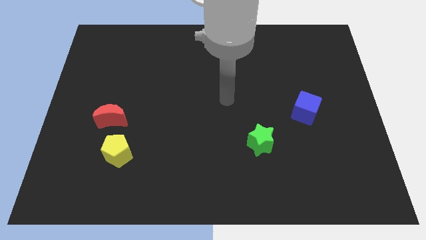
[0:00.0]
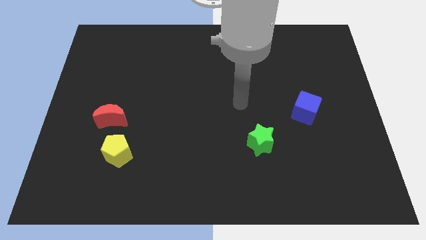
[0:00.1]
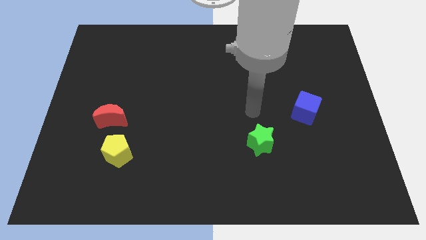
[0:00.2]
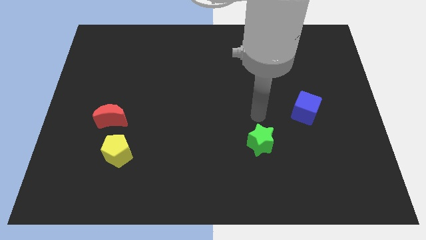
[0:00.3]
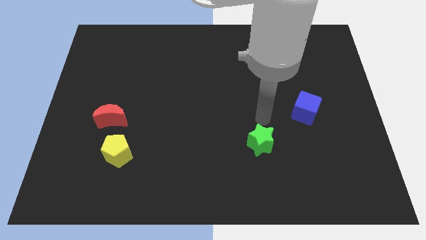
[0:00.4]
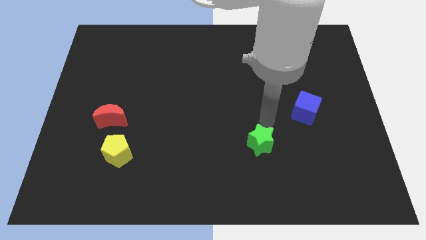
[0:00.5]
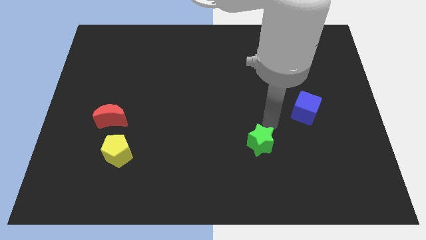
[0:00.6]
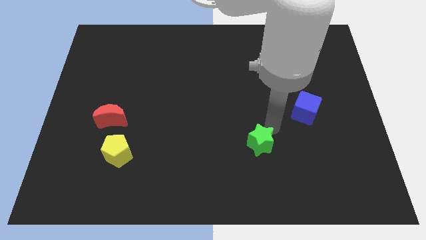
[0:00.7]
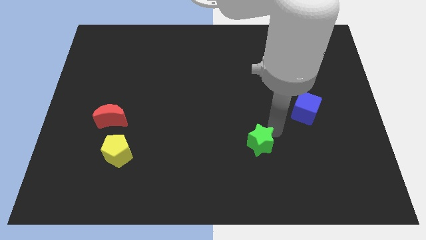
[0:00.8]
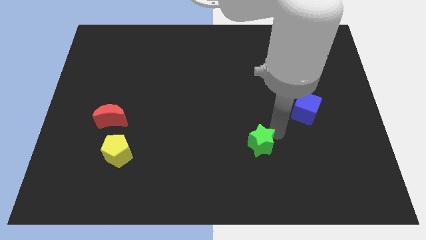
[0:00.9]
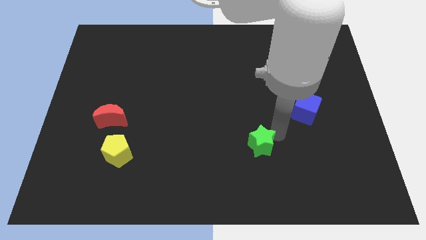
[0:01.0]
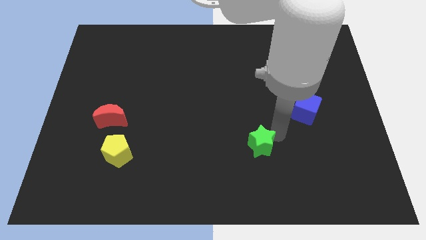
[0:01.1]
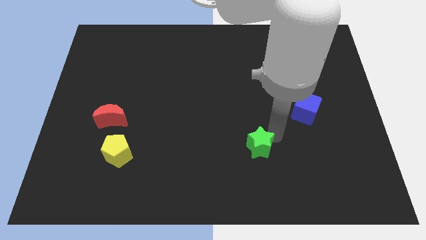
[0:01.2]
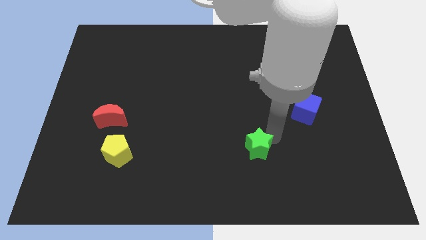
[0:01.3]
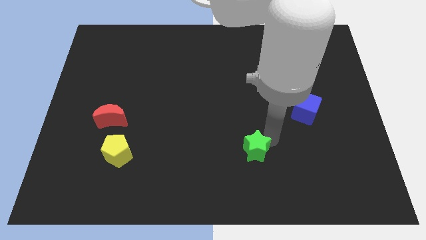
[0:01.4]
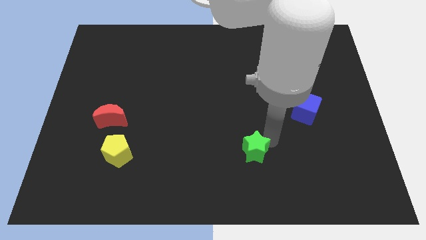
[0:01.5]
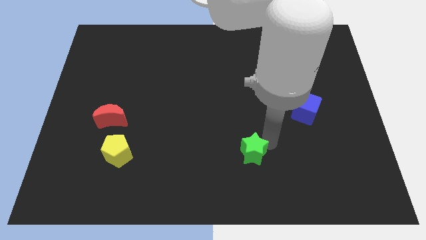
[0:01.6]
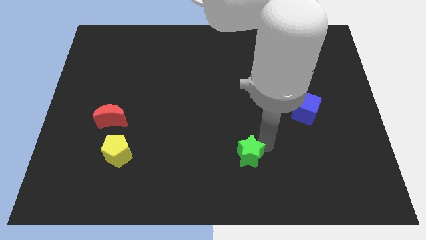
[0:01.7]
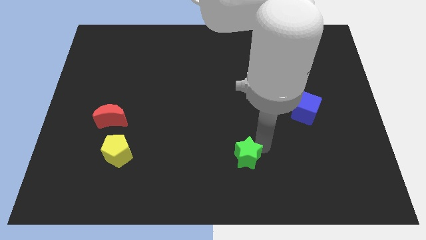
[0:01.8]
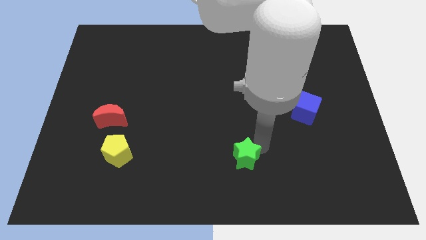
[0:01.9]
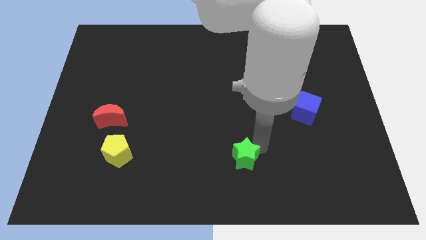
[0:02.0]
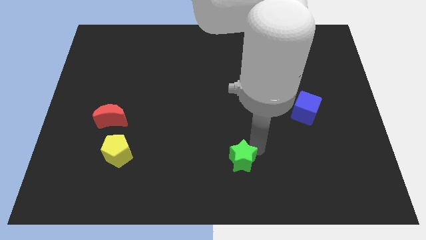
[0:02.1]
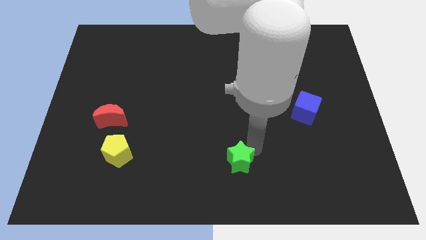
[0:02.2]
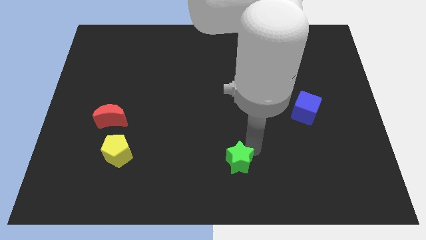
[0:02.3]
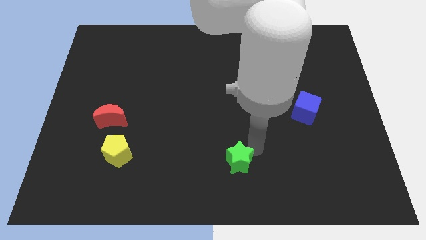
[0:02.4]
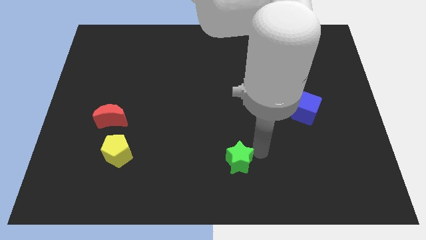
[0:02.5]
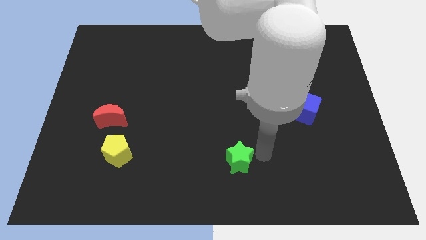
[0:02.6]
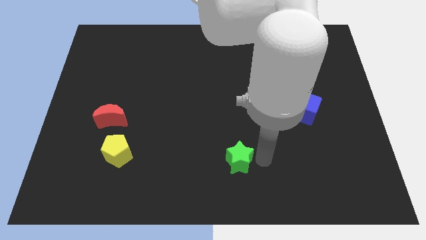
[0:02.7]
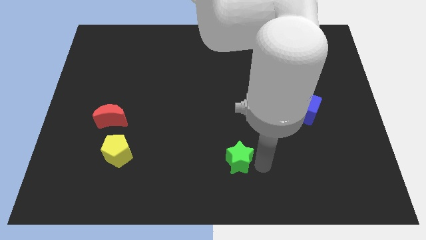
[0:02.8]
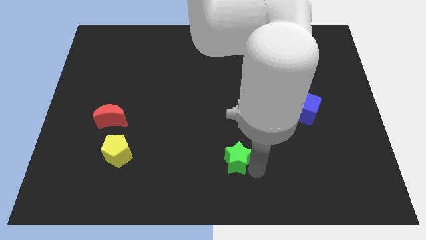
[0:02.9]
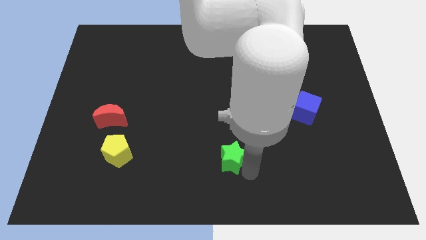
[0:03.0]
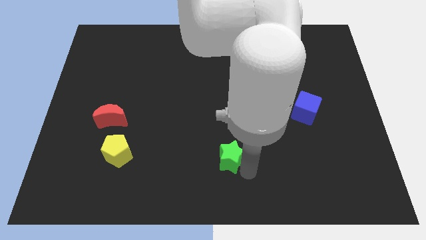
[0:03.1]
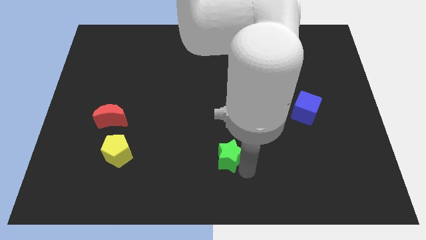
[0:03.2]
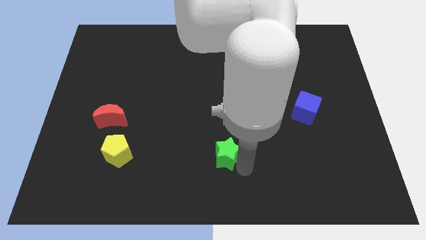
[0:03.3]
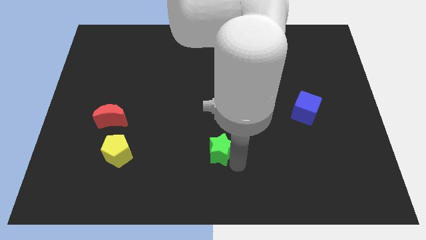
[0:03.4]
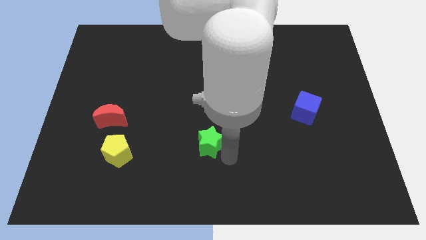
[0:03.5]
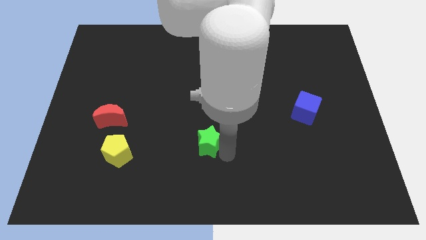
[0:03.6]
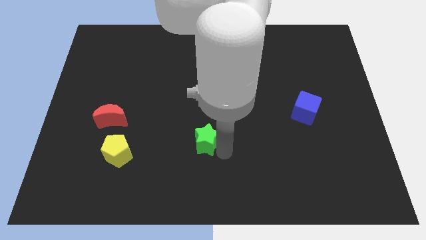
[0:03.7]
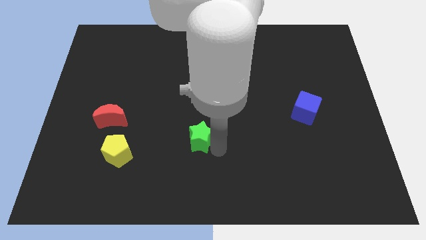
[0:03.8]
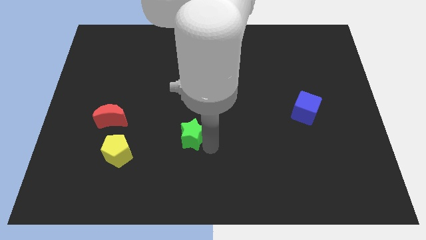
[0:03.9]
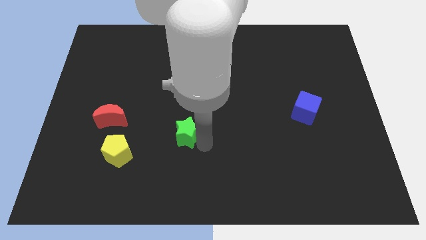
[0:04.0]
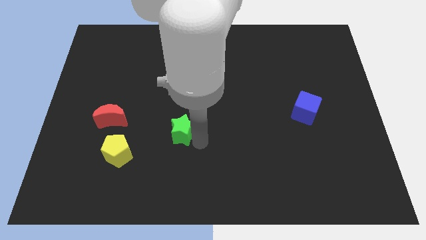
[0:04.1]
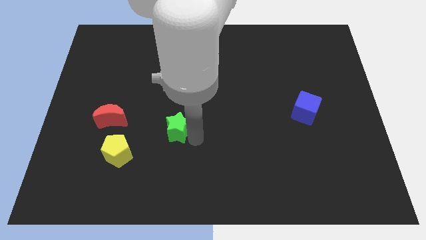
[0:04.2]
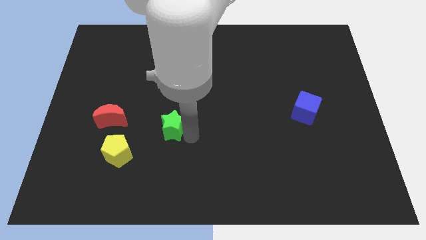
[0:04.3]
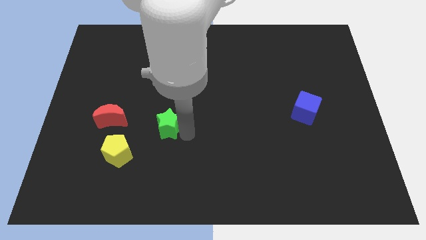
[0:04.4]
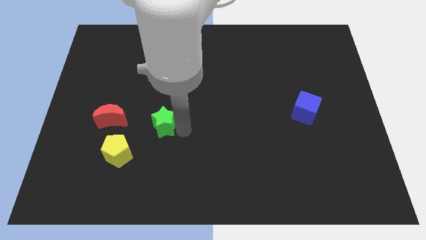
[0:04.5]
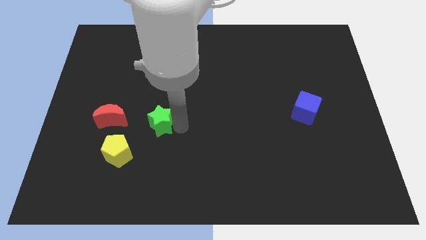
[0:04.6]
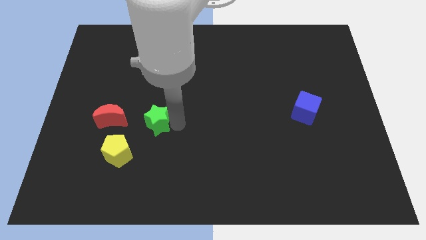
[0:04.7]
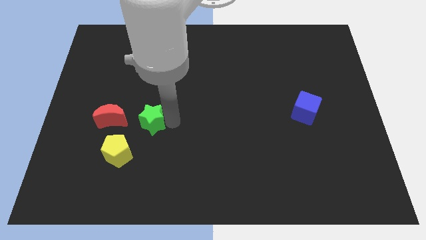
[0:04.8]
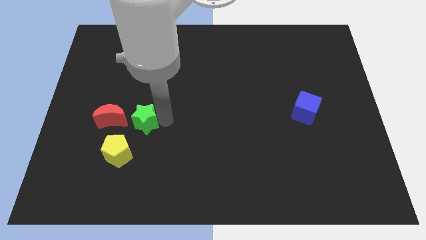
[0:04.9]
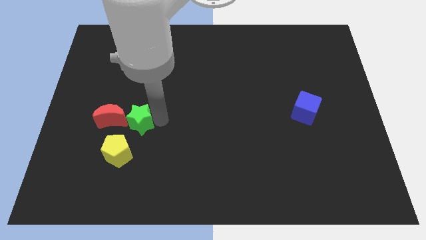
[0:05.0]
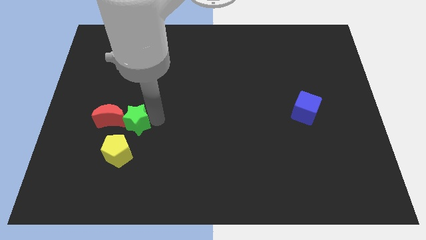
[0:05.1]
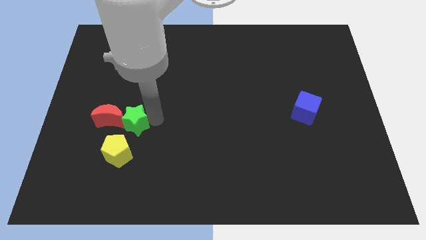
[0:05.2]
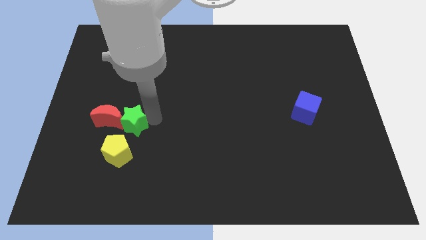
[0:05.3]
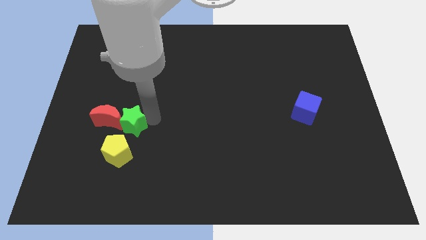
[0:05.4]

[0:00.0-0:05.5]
move the star next to the red block

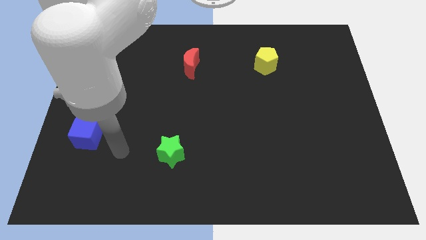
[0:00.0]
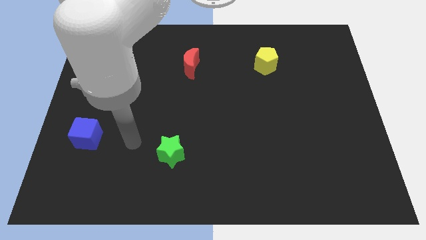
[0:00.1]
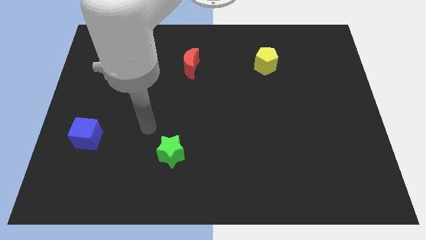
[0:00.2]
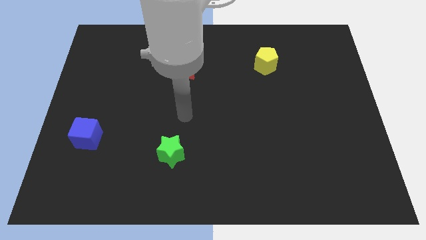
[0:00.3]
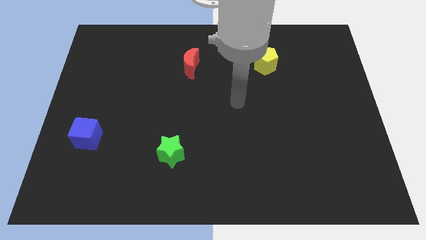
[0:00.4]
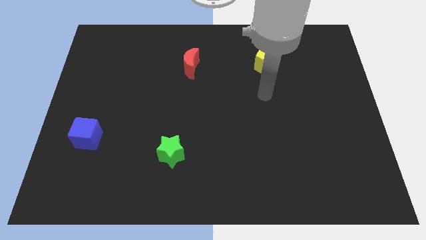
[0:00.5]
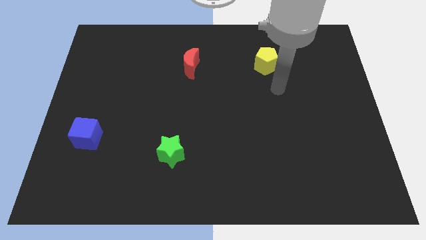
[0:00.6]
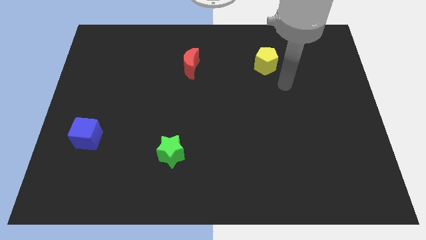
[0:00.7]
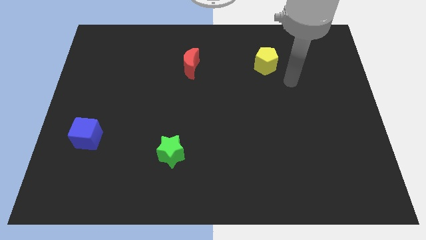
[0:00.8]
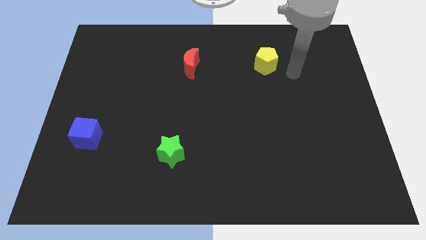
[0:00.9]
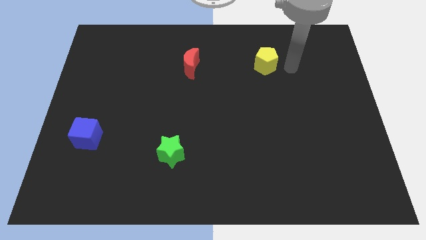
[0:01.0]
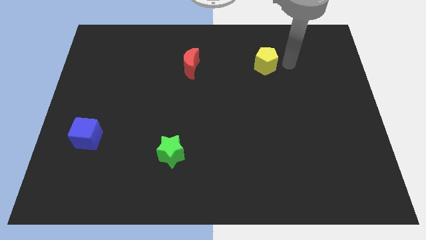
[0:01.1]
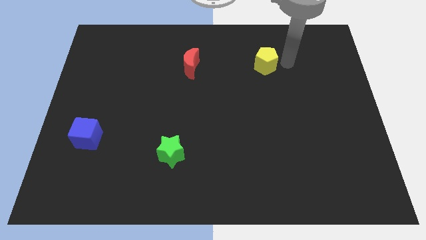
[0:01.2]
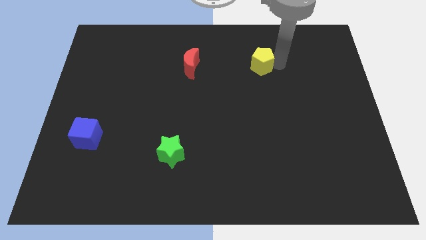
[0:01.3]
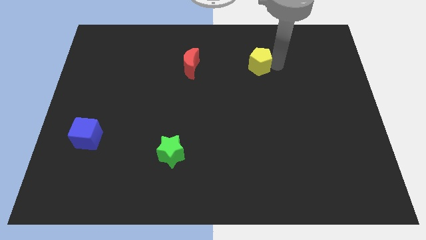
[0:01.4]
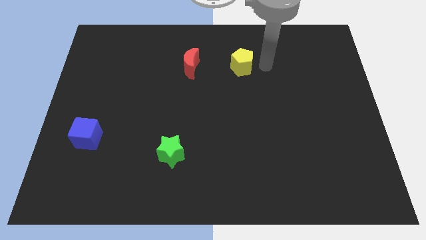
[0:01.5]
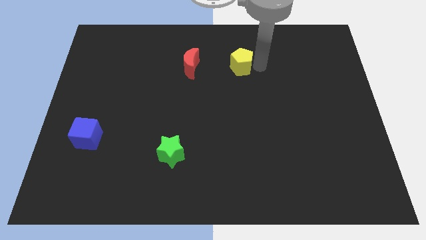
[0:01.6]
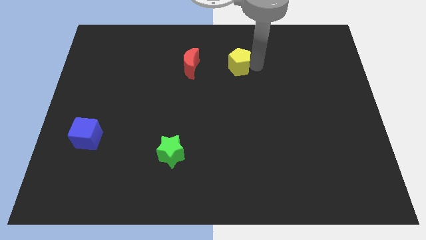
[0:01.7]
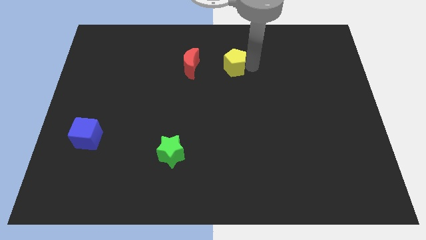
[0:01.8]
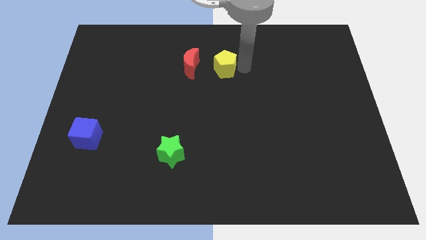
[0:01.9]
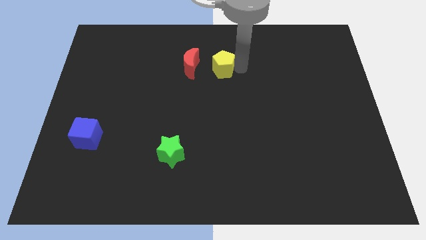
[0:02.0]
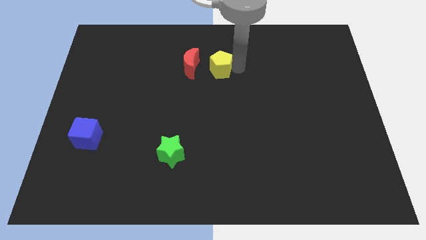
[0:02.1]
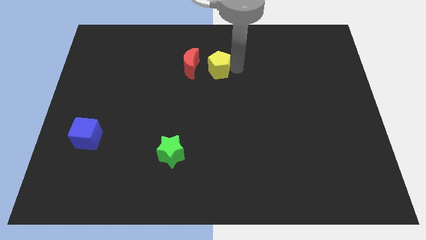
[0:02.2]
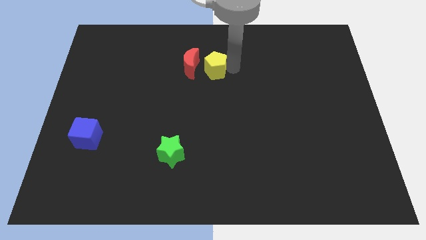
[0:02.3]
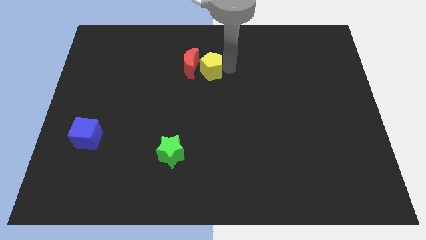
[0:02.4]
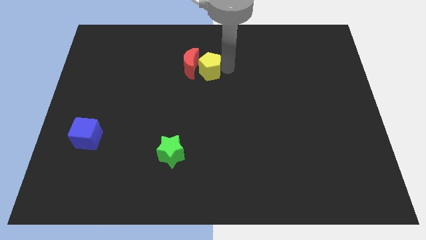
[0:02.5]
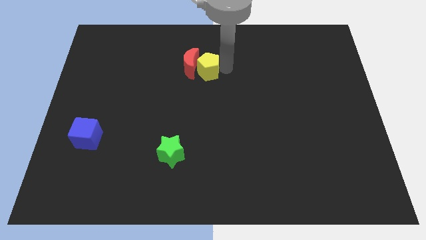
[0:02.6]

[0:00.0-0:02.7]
put the pentagon towards the moon

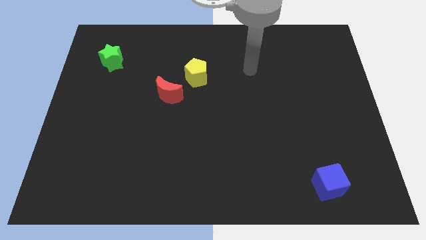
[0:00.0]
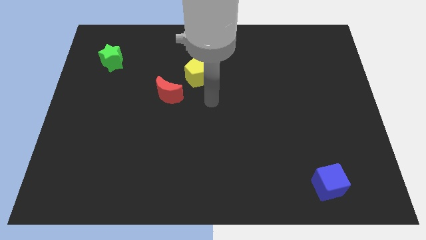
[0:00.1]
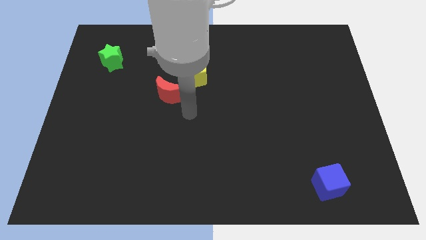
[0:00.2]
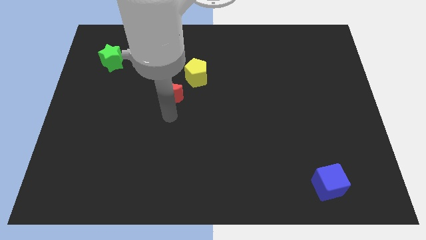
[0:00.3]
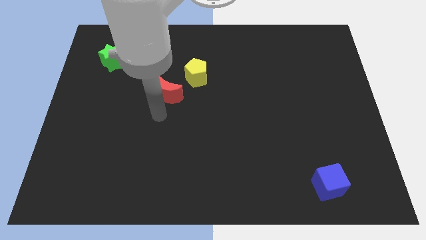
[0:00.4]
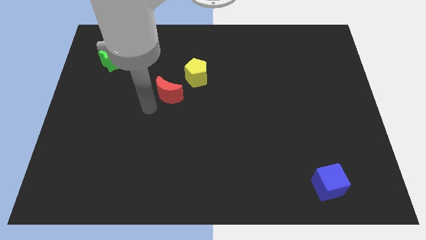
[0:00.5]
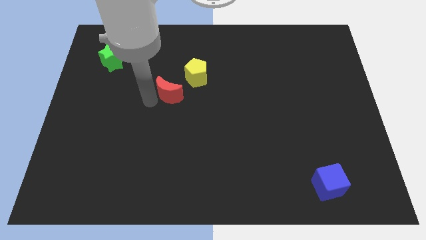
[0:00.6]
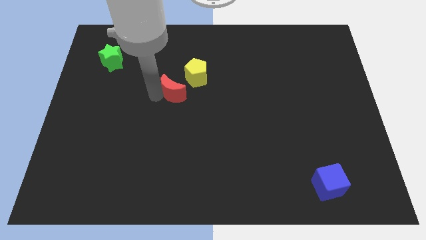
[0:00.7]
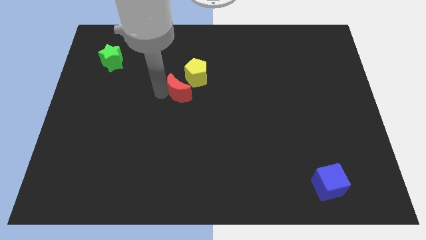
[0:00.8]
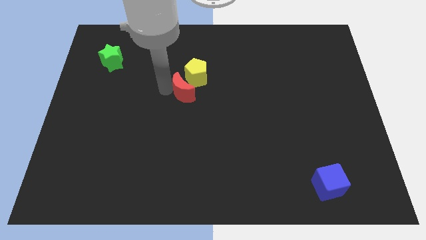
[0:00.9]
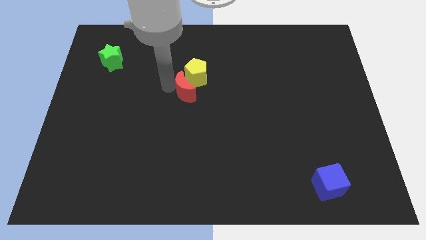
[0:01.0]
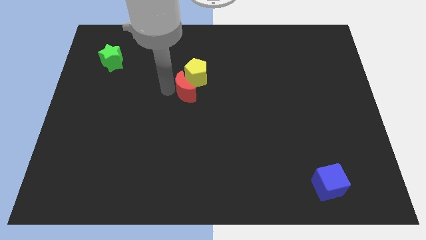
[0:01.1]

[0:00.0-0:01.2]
put the red moon next to the yellow block
